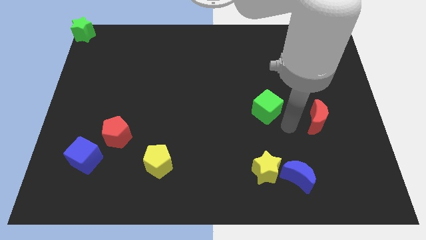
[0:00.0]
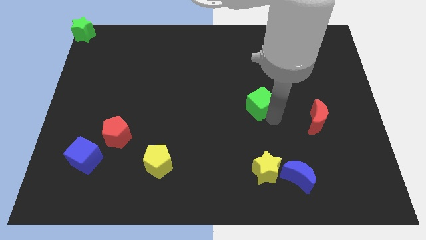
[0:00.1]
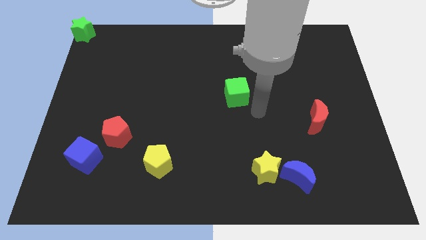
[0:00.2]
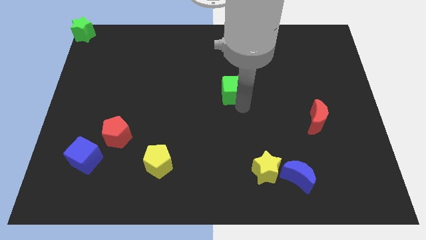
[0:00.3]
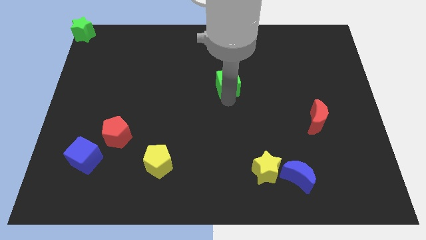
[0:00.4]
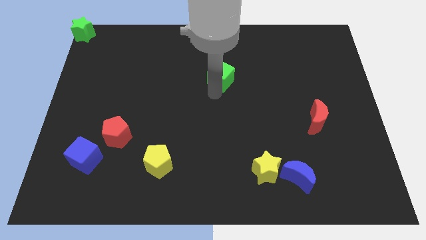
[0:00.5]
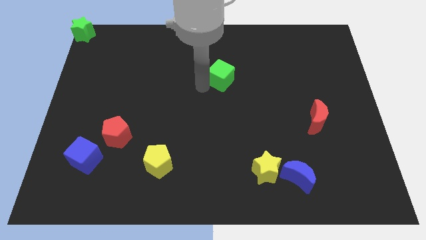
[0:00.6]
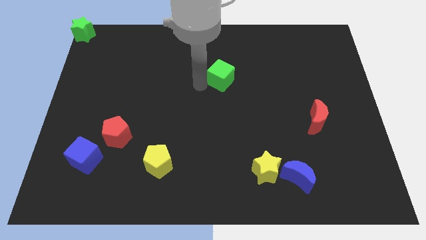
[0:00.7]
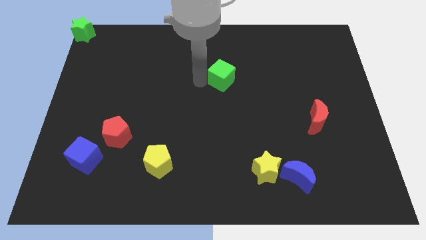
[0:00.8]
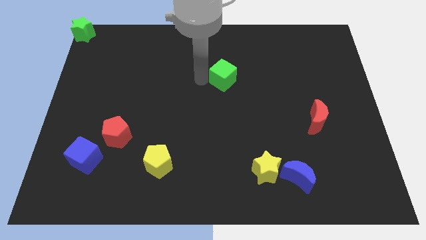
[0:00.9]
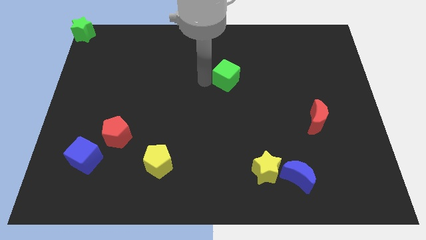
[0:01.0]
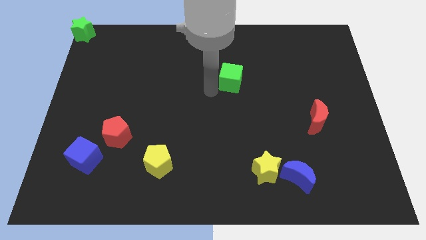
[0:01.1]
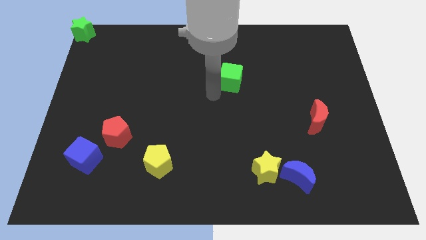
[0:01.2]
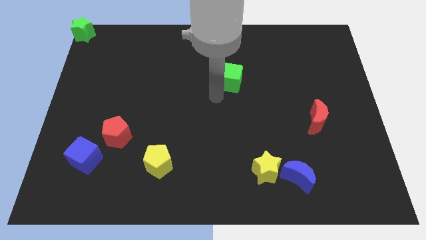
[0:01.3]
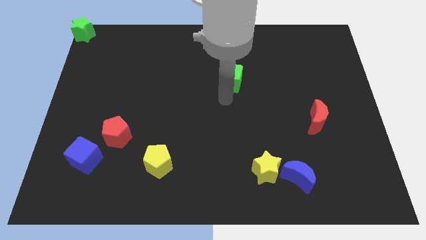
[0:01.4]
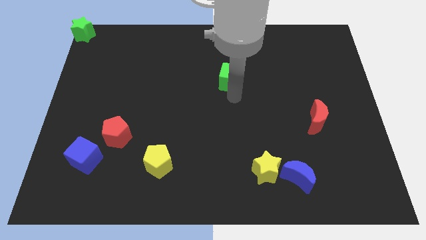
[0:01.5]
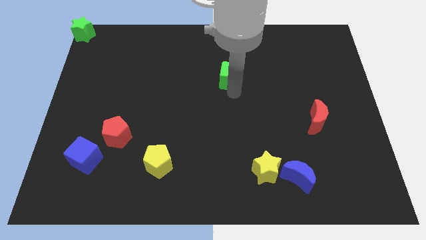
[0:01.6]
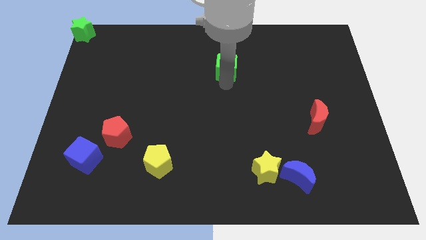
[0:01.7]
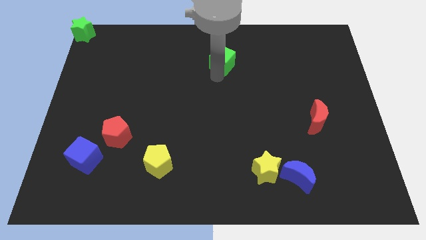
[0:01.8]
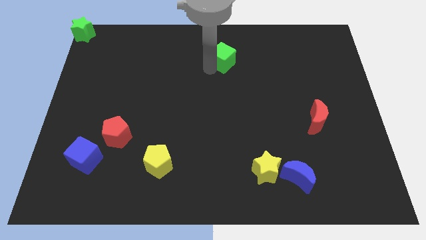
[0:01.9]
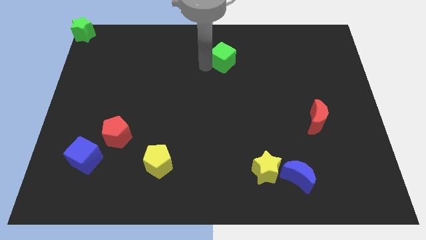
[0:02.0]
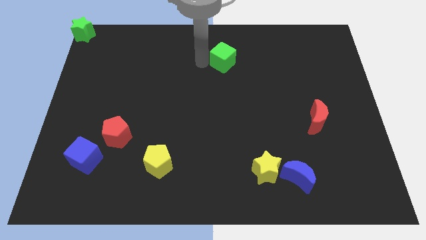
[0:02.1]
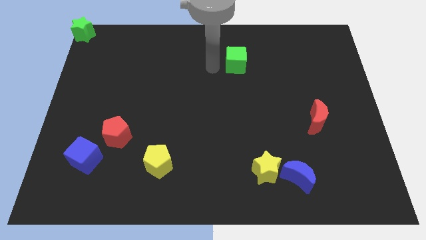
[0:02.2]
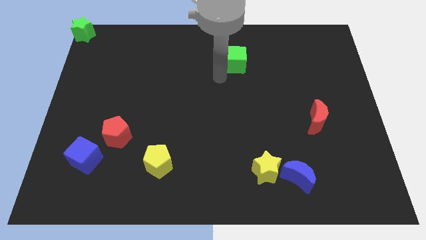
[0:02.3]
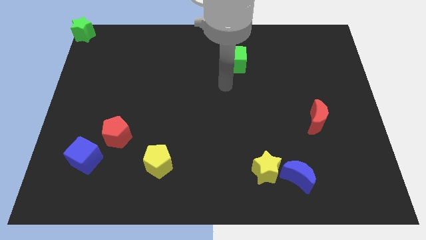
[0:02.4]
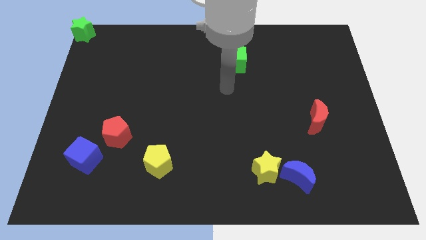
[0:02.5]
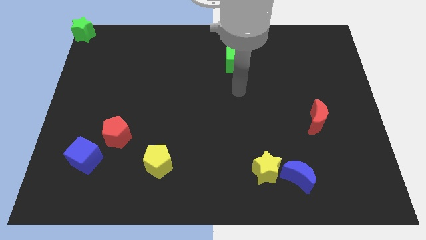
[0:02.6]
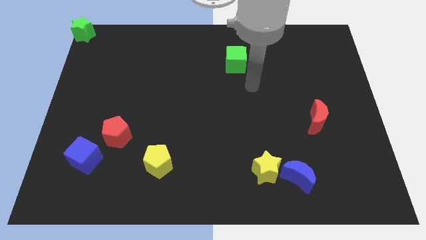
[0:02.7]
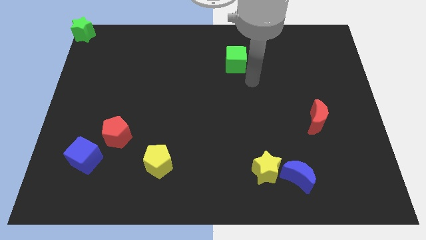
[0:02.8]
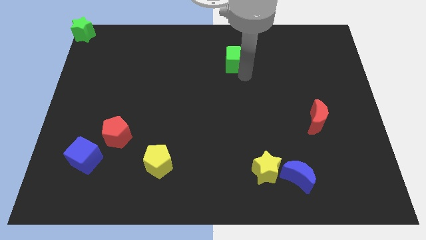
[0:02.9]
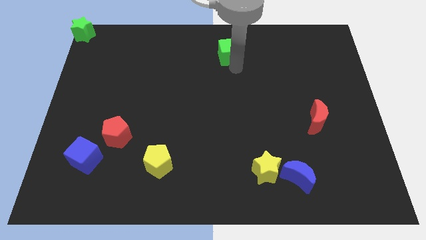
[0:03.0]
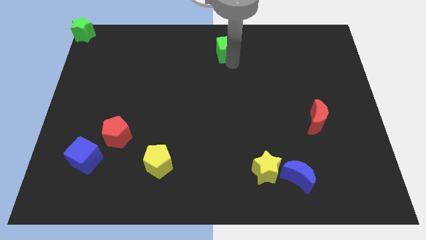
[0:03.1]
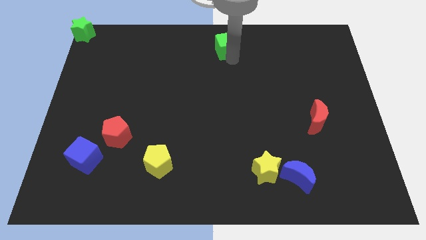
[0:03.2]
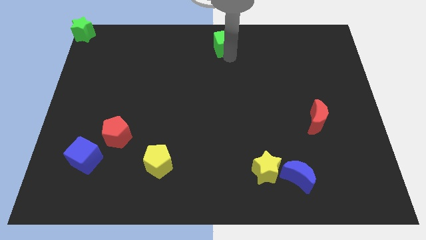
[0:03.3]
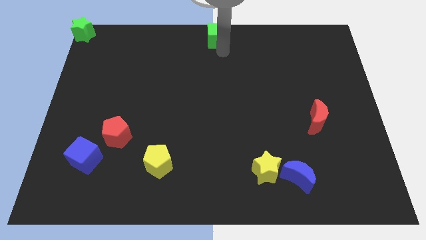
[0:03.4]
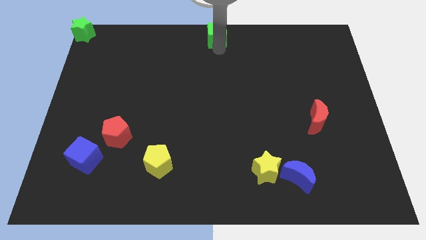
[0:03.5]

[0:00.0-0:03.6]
place green cube to the top center of the board

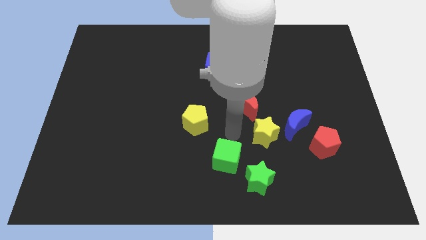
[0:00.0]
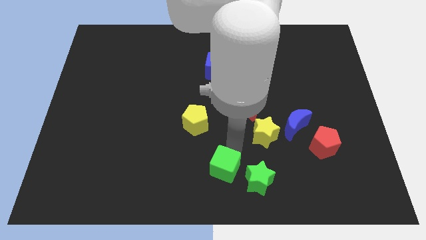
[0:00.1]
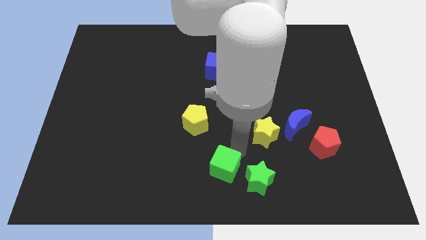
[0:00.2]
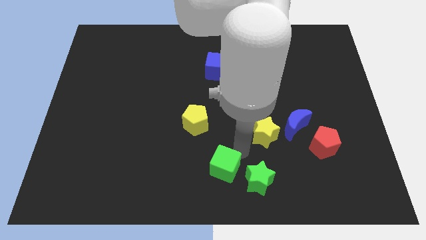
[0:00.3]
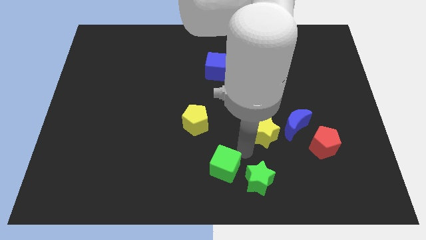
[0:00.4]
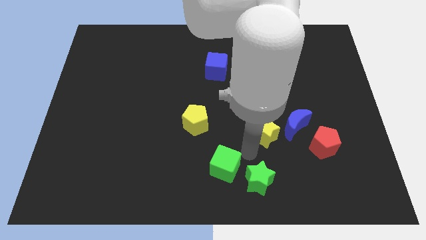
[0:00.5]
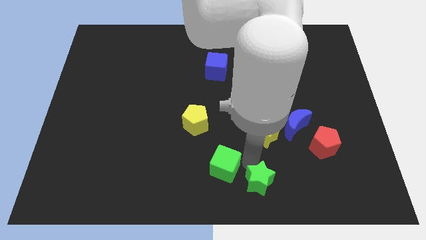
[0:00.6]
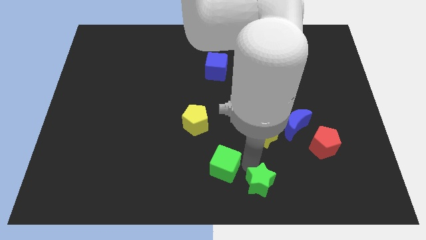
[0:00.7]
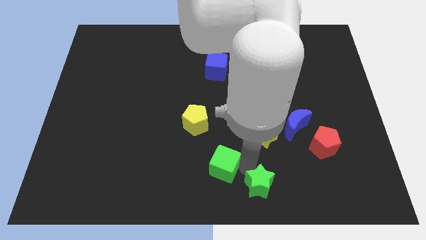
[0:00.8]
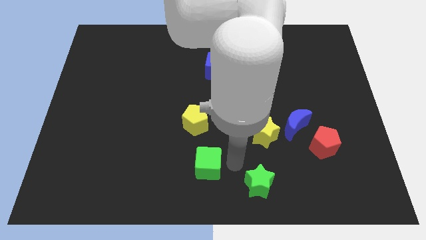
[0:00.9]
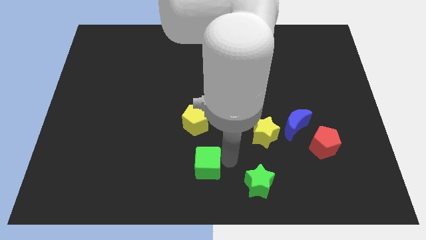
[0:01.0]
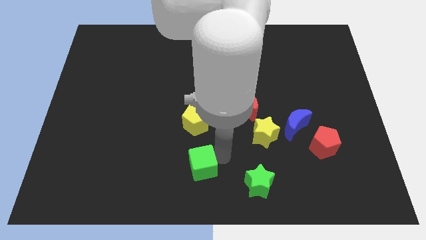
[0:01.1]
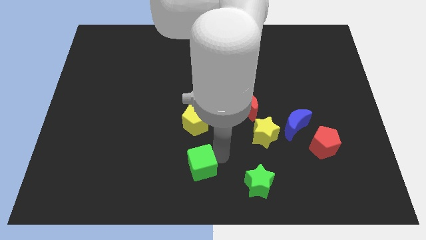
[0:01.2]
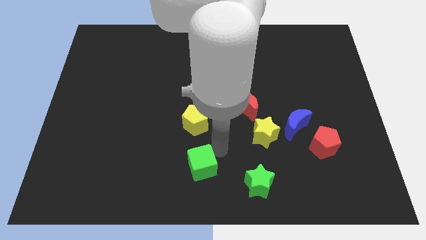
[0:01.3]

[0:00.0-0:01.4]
move green cube to the bottom right side of the yellow pentagon

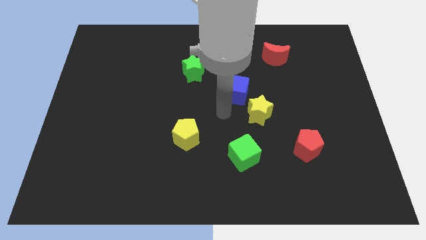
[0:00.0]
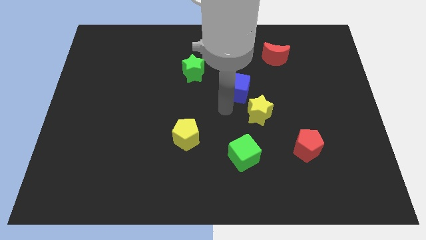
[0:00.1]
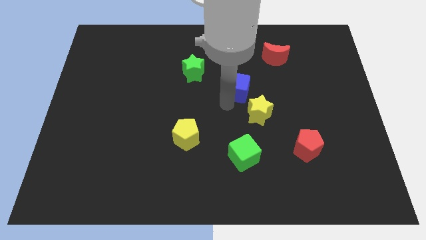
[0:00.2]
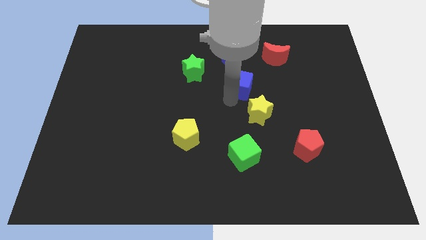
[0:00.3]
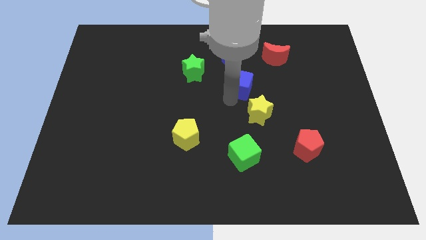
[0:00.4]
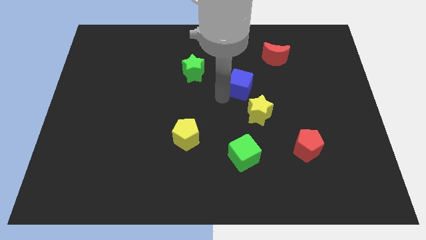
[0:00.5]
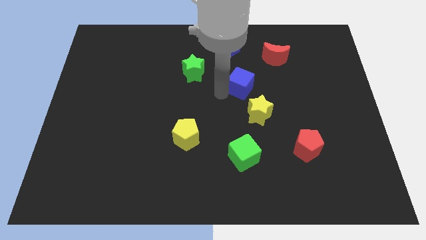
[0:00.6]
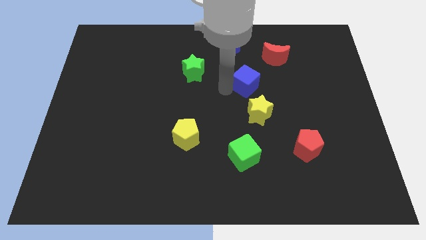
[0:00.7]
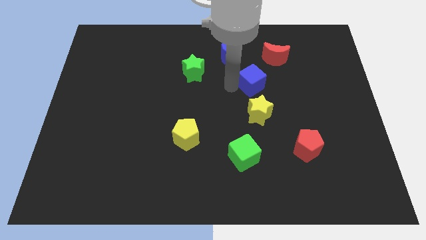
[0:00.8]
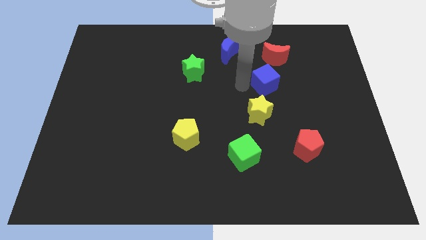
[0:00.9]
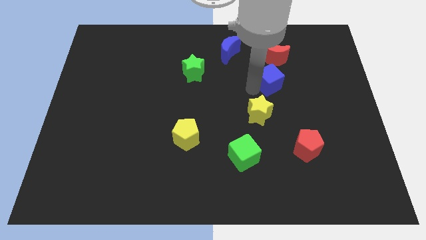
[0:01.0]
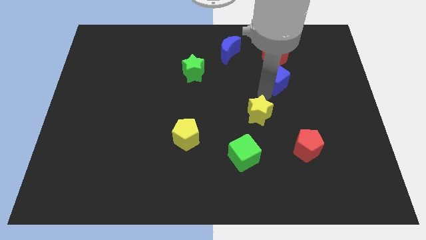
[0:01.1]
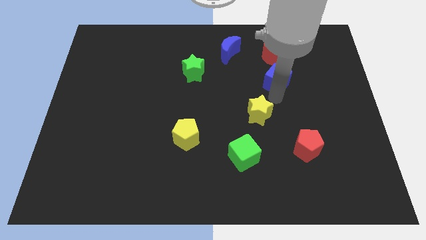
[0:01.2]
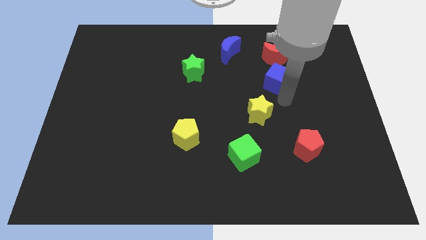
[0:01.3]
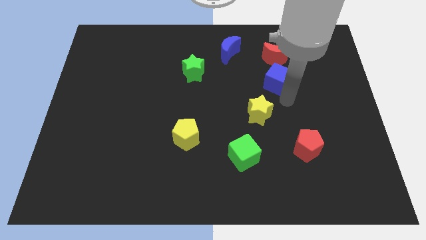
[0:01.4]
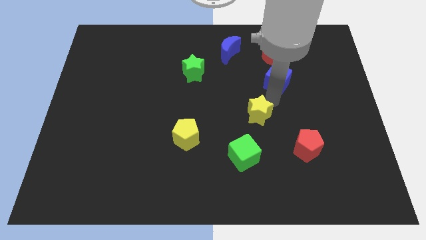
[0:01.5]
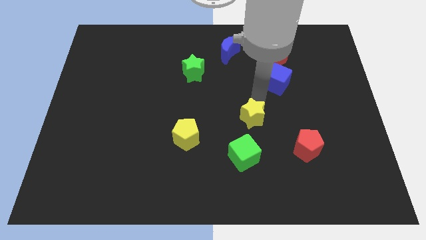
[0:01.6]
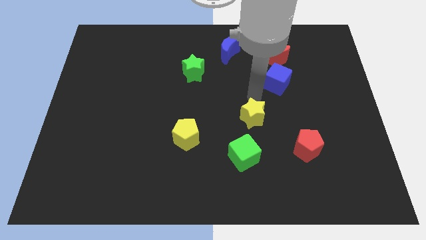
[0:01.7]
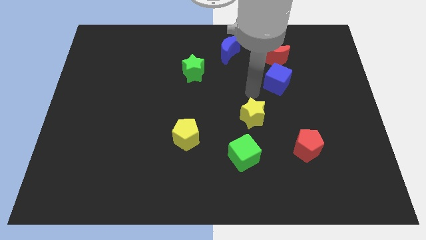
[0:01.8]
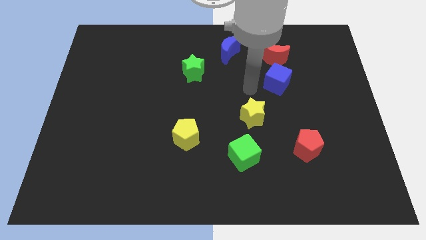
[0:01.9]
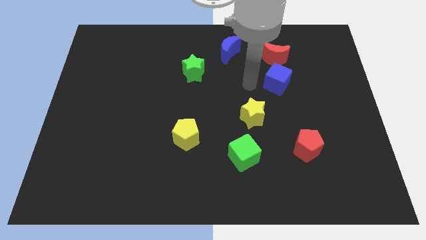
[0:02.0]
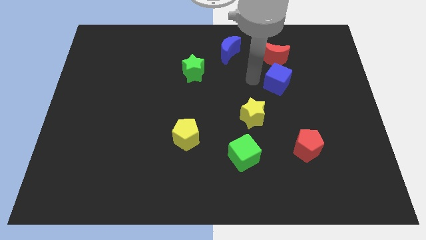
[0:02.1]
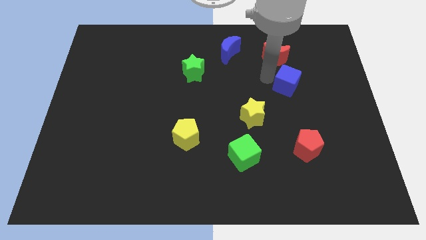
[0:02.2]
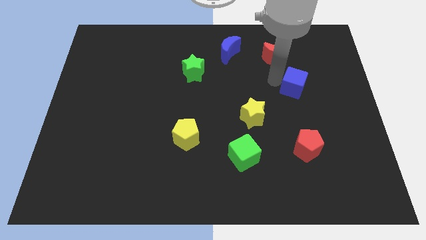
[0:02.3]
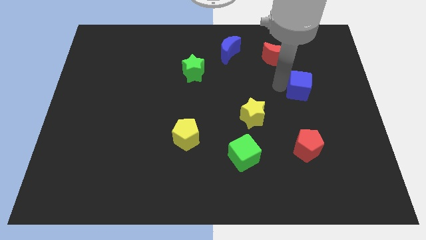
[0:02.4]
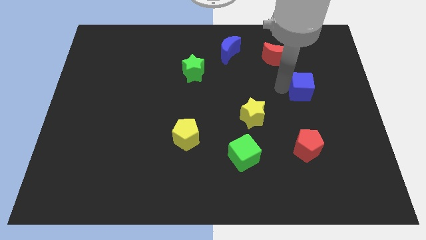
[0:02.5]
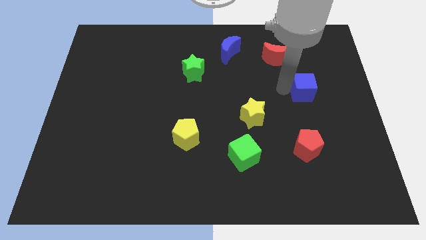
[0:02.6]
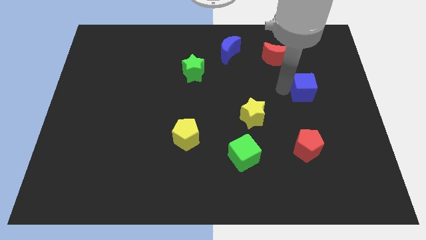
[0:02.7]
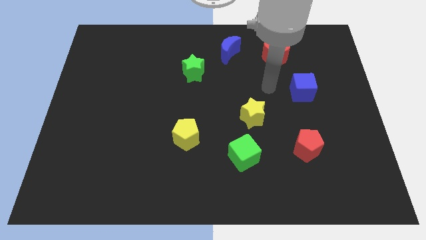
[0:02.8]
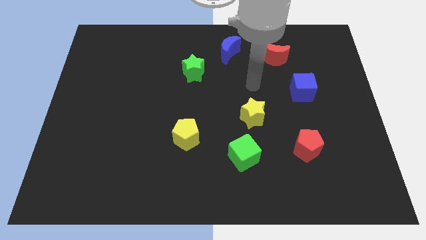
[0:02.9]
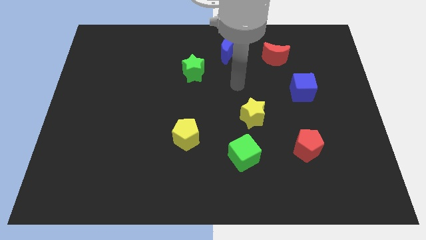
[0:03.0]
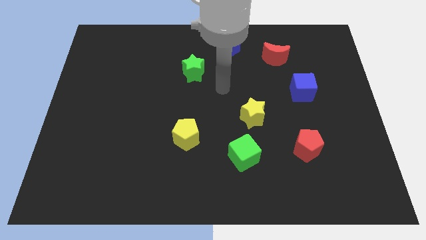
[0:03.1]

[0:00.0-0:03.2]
move blue cube above the red pentagon

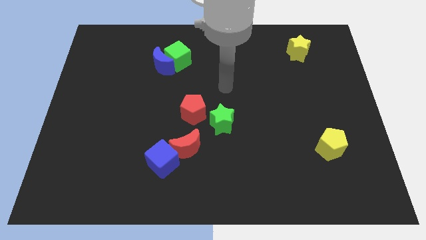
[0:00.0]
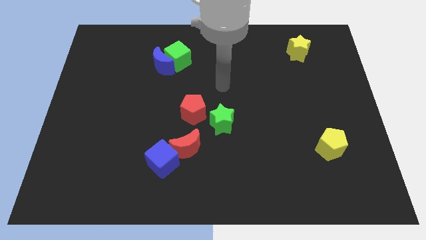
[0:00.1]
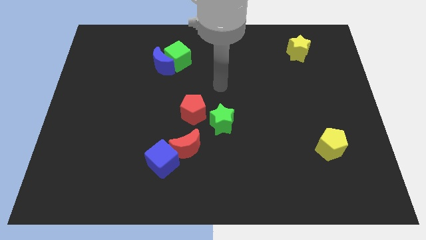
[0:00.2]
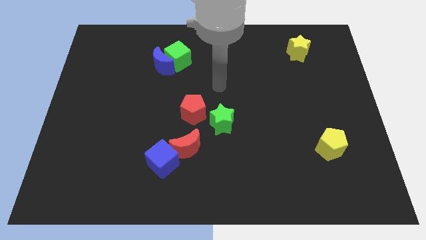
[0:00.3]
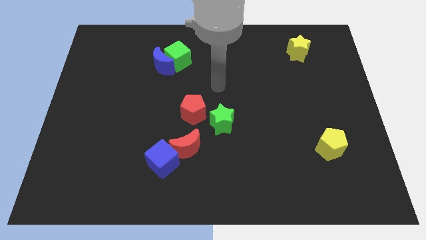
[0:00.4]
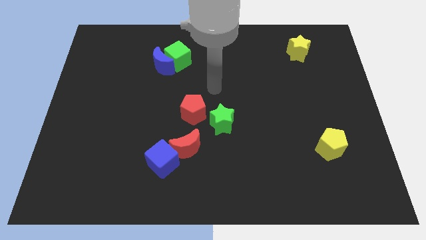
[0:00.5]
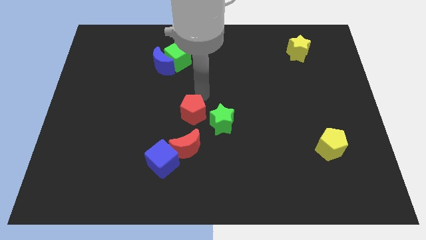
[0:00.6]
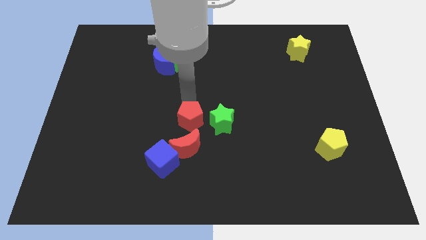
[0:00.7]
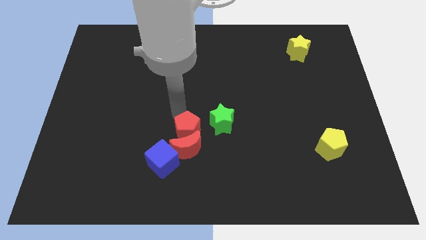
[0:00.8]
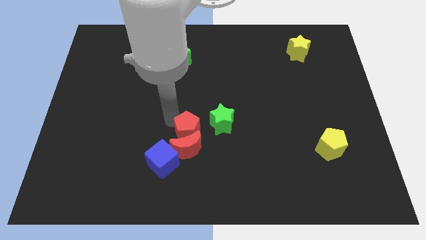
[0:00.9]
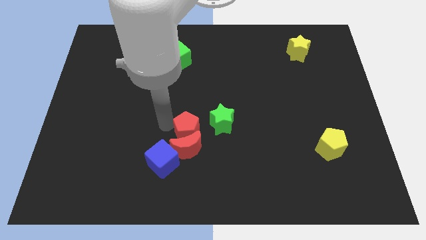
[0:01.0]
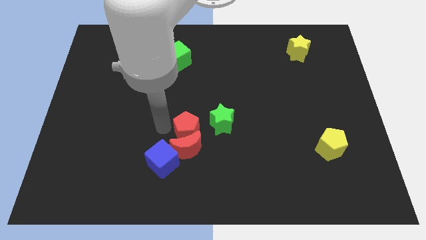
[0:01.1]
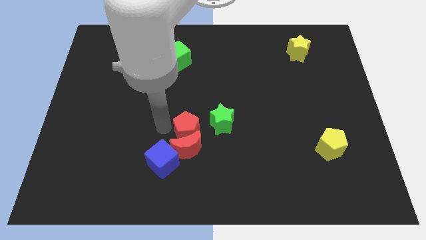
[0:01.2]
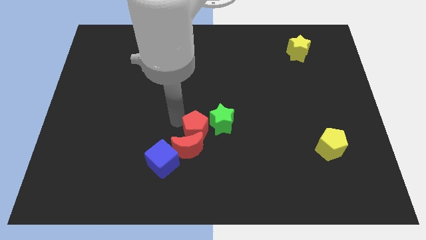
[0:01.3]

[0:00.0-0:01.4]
push red pentagon into red moon
